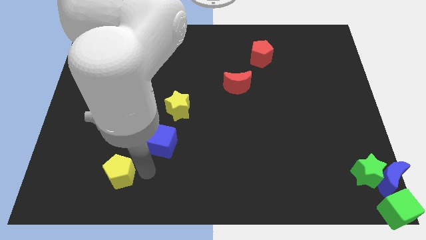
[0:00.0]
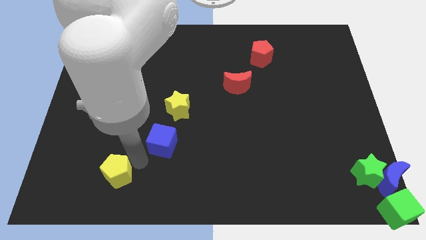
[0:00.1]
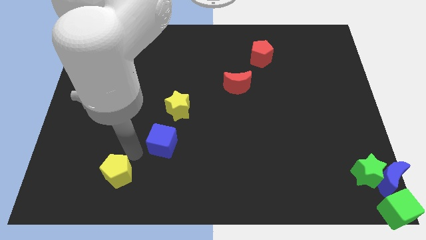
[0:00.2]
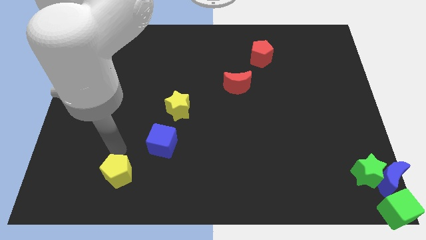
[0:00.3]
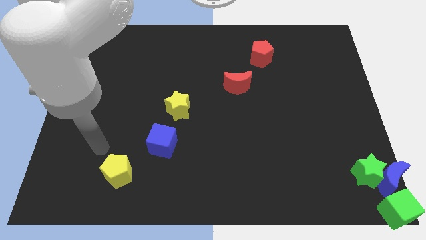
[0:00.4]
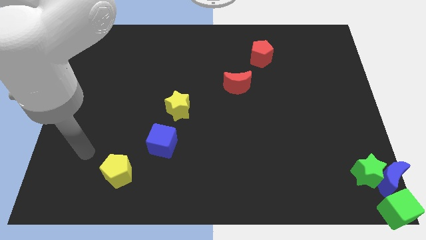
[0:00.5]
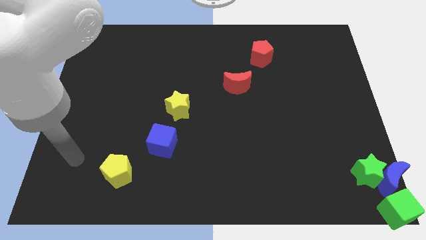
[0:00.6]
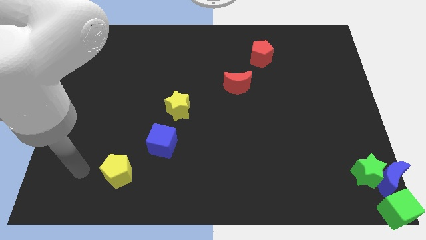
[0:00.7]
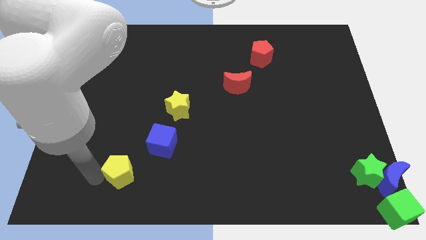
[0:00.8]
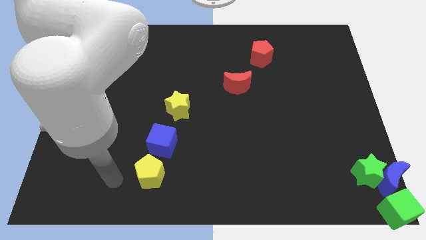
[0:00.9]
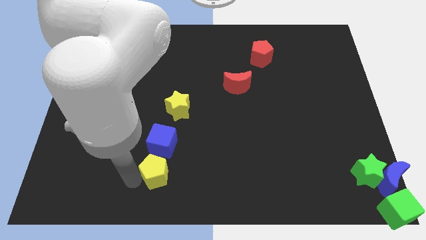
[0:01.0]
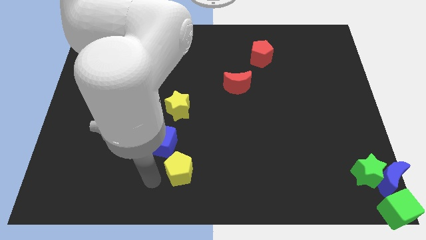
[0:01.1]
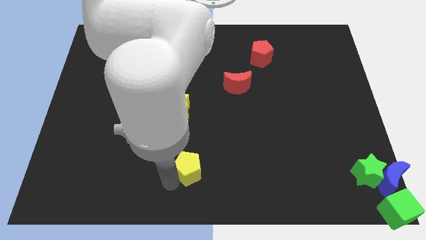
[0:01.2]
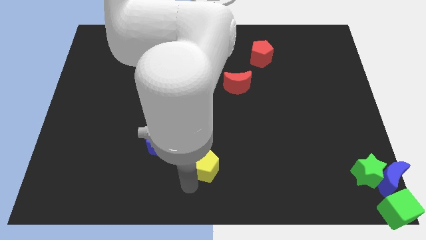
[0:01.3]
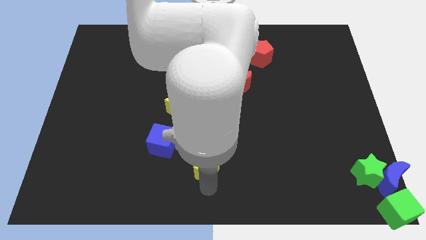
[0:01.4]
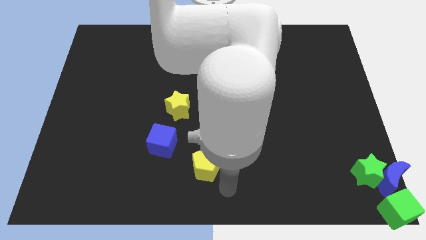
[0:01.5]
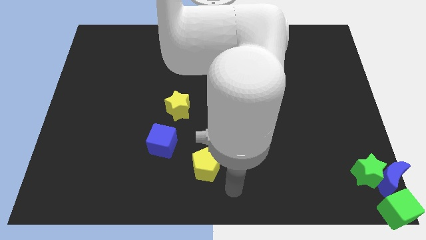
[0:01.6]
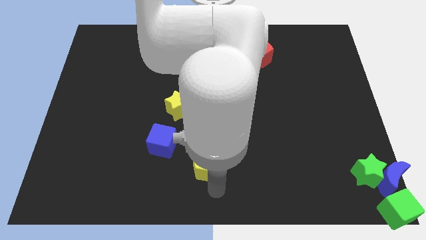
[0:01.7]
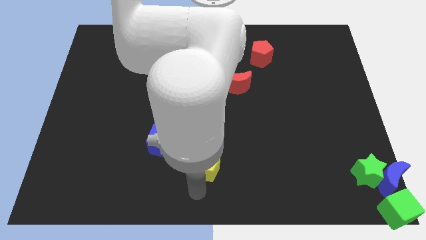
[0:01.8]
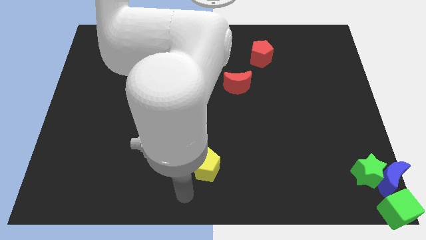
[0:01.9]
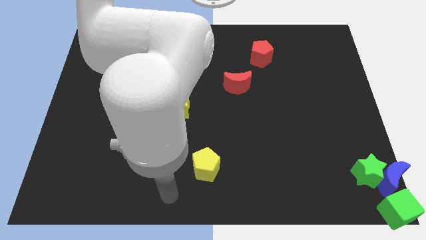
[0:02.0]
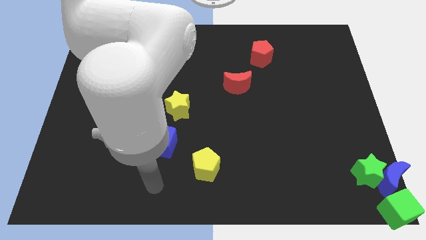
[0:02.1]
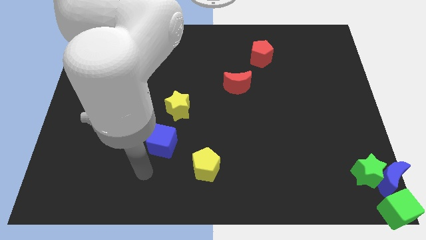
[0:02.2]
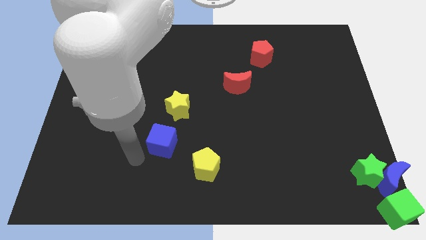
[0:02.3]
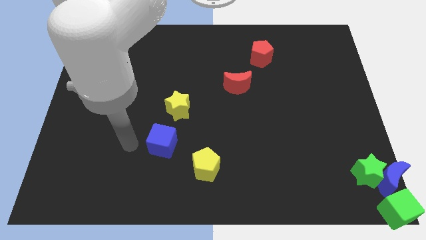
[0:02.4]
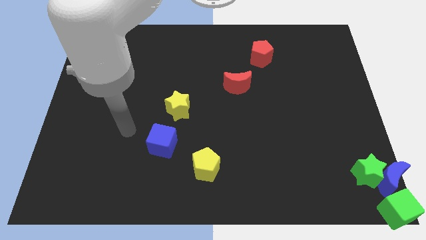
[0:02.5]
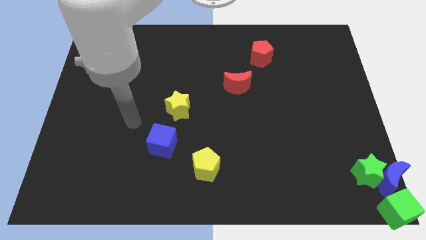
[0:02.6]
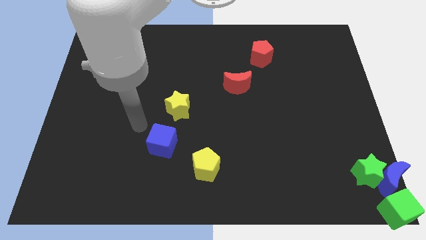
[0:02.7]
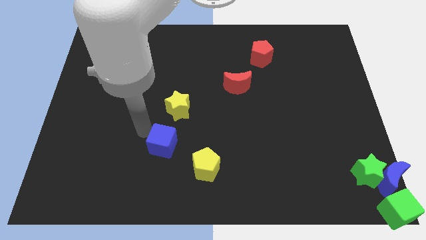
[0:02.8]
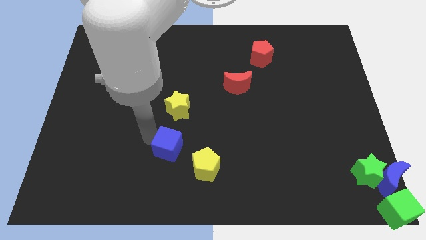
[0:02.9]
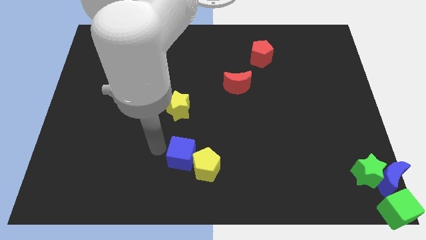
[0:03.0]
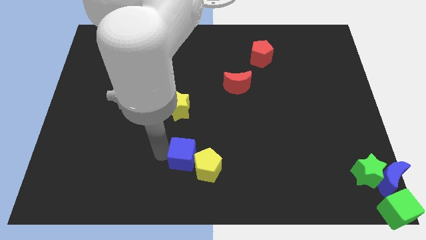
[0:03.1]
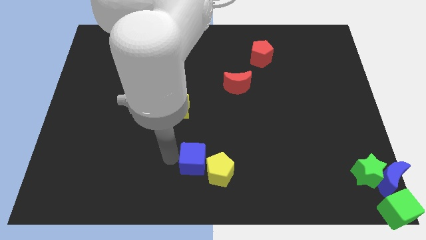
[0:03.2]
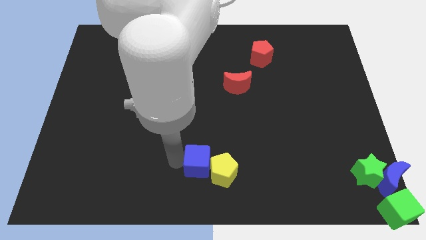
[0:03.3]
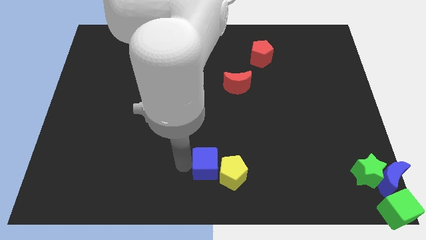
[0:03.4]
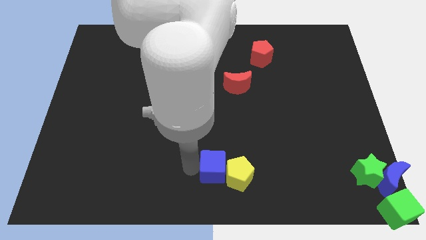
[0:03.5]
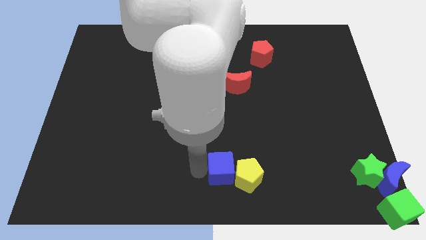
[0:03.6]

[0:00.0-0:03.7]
move the blue cube and the yellow pentagon to the bottom right of the board

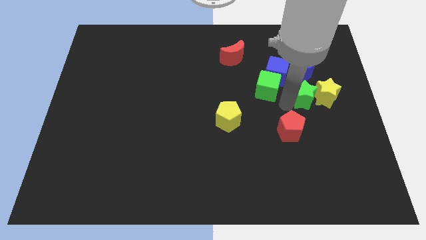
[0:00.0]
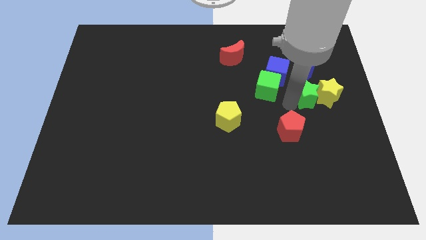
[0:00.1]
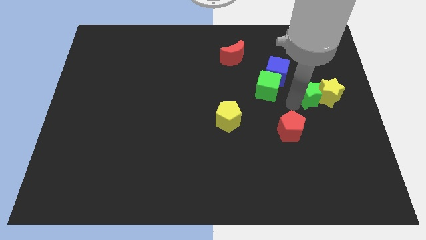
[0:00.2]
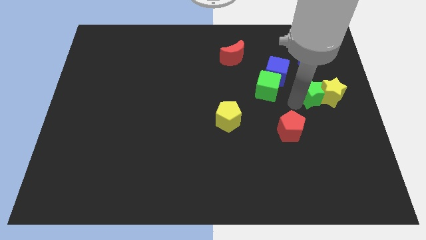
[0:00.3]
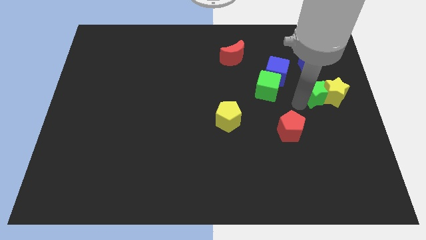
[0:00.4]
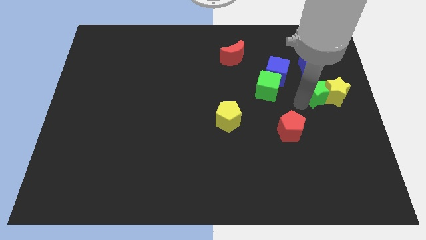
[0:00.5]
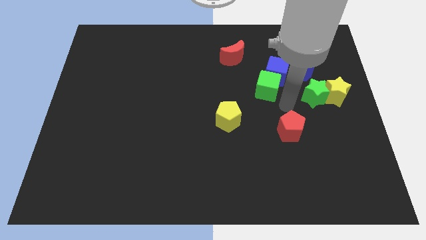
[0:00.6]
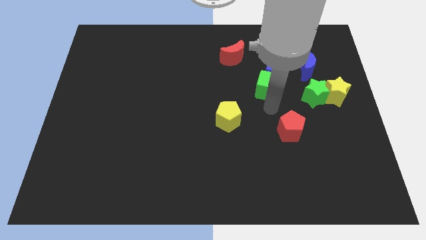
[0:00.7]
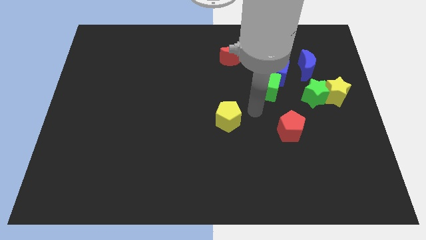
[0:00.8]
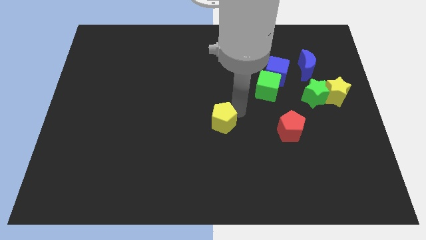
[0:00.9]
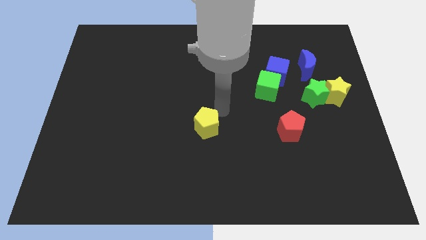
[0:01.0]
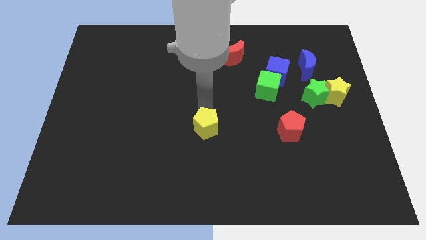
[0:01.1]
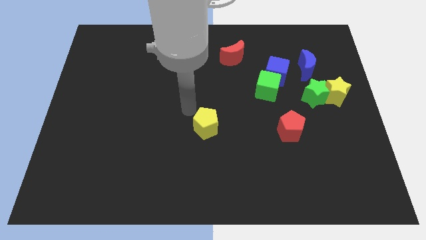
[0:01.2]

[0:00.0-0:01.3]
move the green and yellow star slightly right

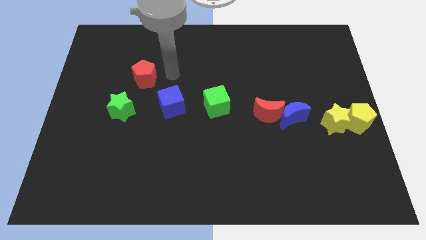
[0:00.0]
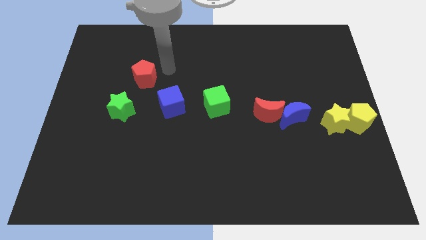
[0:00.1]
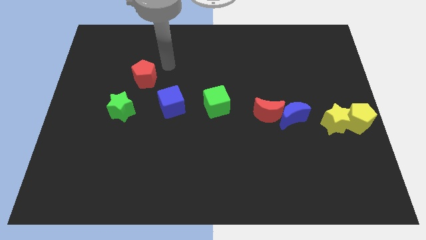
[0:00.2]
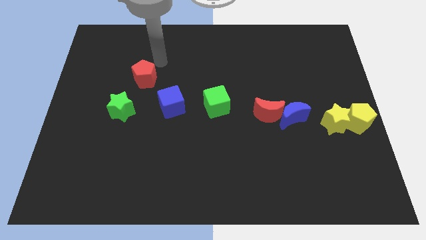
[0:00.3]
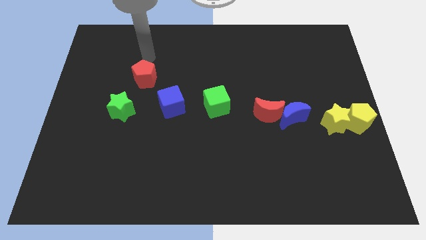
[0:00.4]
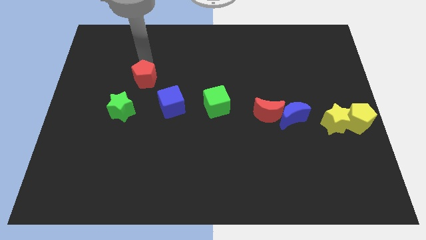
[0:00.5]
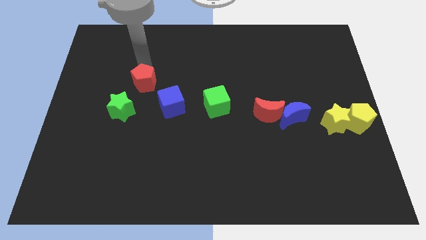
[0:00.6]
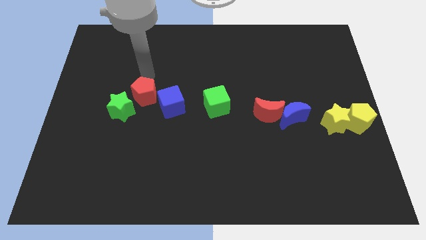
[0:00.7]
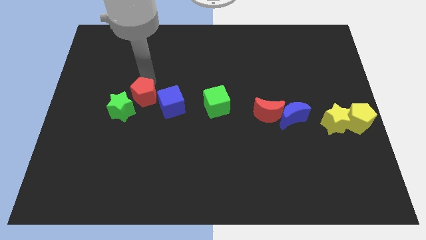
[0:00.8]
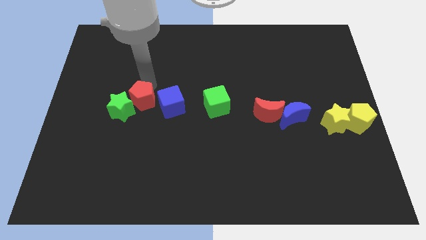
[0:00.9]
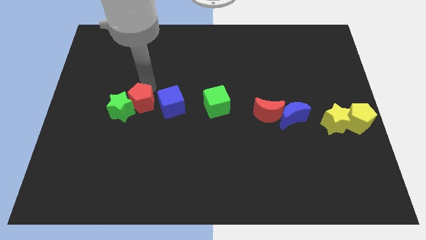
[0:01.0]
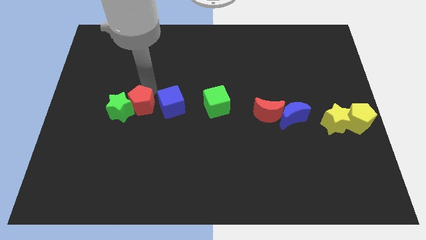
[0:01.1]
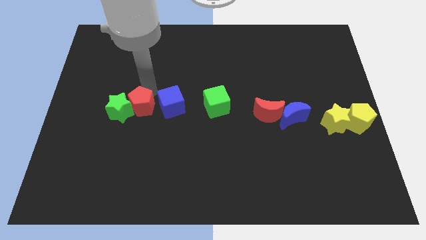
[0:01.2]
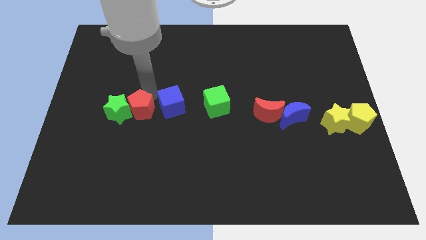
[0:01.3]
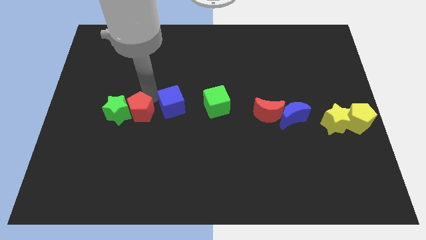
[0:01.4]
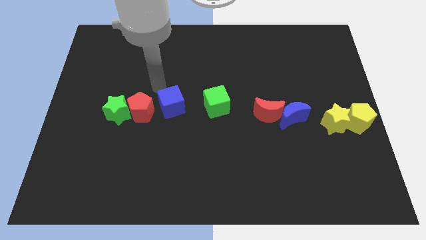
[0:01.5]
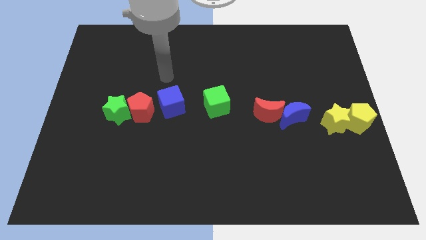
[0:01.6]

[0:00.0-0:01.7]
push the red pentagon into the green star

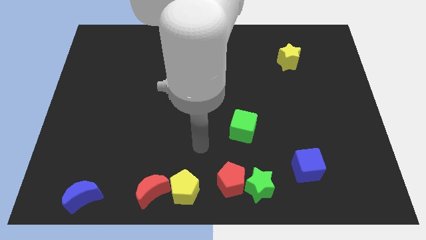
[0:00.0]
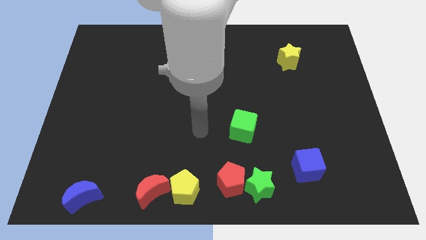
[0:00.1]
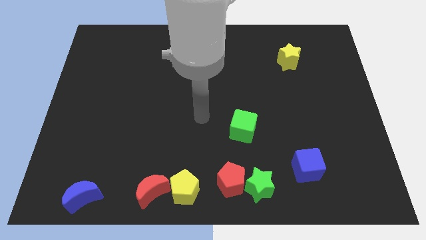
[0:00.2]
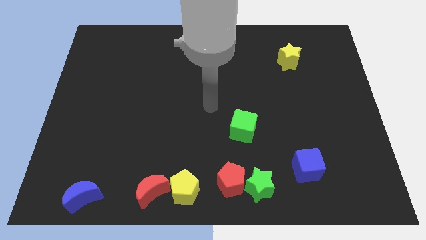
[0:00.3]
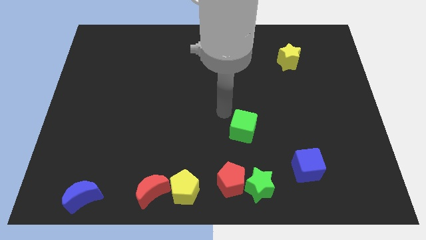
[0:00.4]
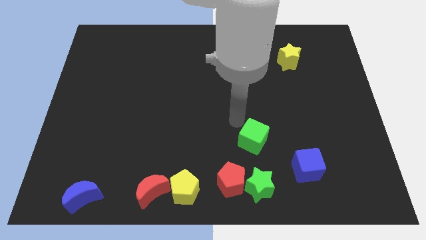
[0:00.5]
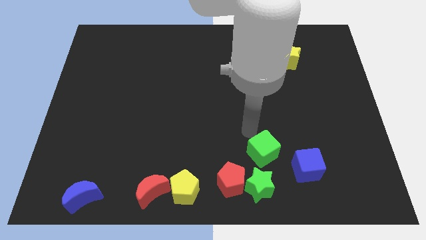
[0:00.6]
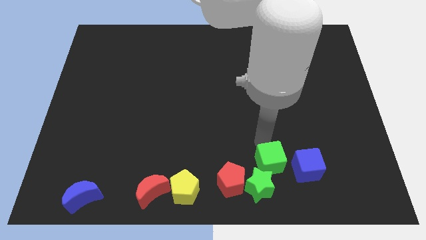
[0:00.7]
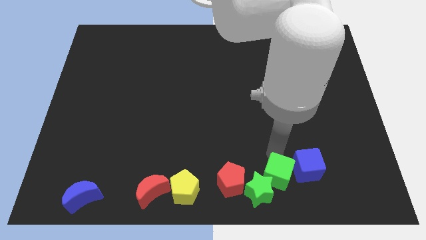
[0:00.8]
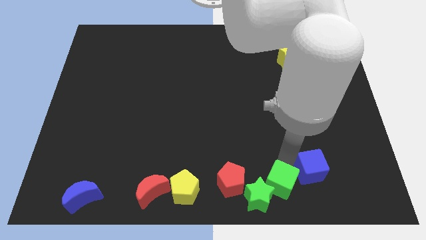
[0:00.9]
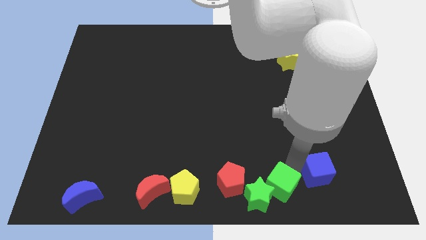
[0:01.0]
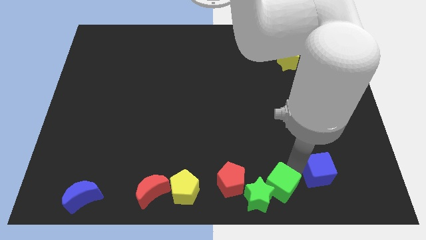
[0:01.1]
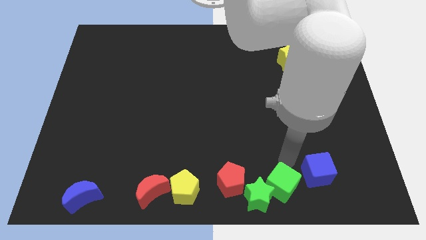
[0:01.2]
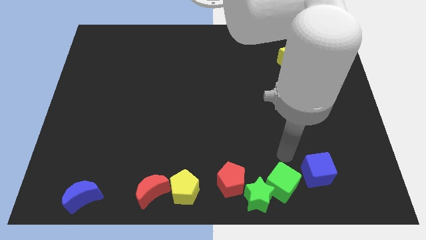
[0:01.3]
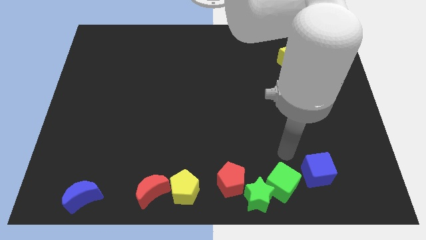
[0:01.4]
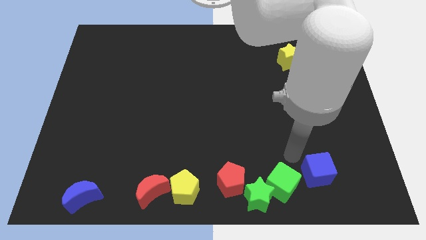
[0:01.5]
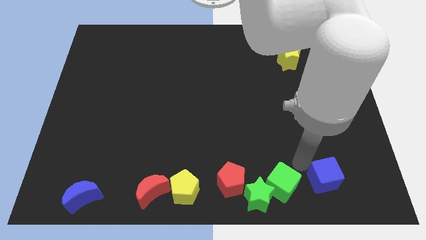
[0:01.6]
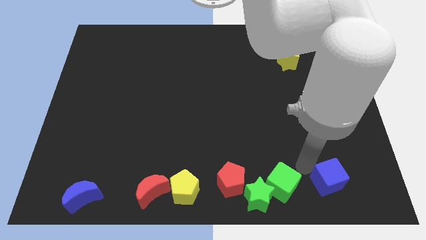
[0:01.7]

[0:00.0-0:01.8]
place the green square at the right side of the green star

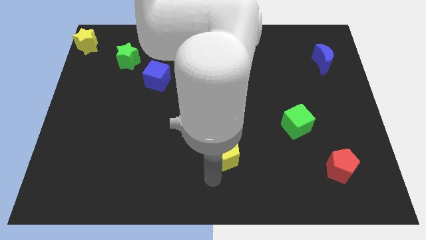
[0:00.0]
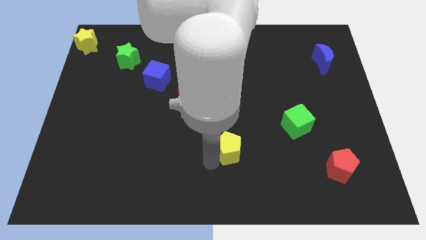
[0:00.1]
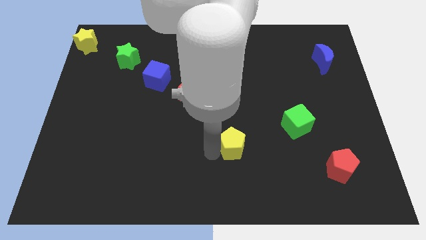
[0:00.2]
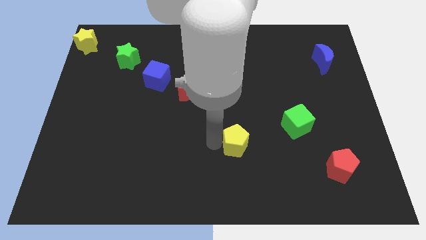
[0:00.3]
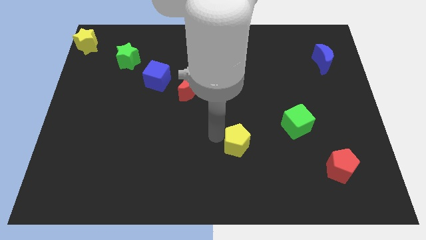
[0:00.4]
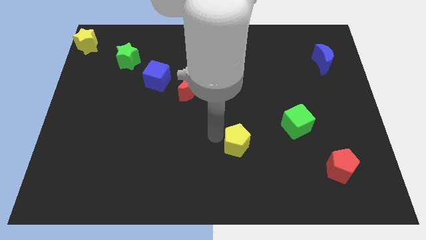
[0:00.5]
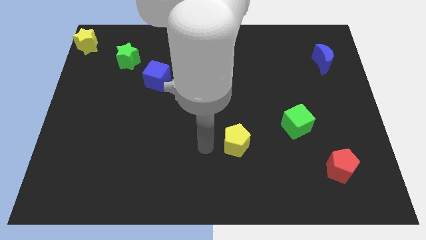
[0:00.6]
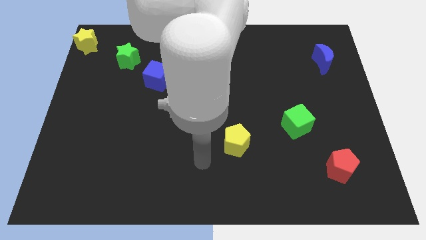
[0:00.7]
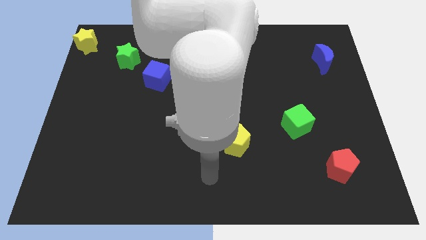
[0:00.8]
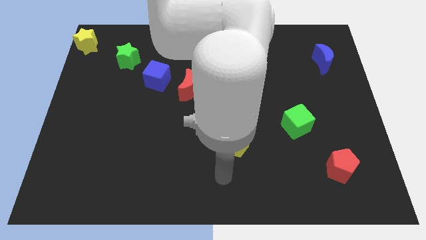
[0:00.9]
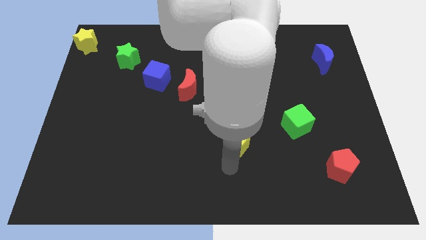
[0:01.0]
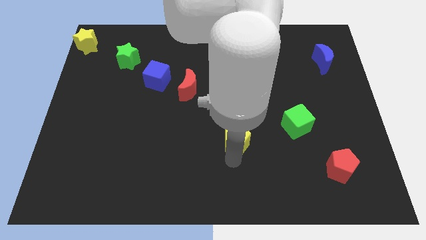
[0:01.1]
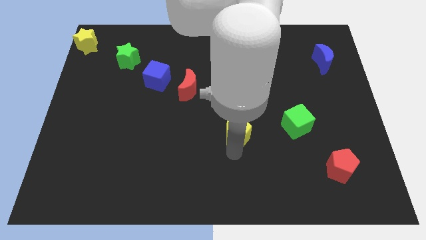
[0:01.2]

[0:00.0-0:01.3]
push yellow pentagon beside green cube
